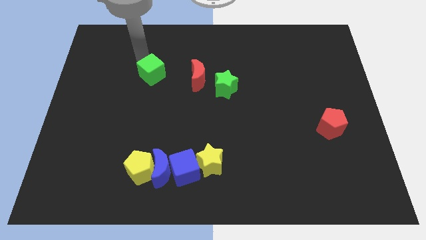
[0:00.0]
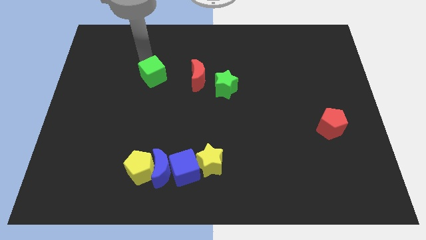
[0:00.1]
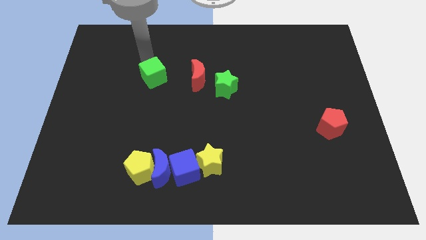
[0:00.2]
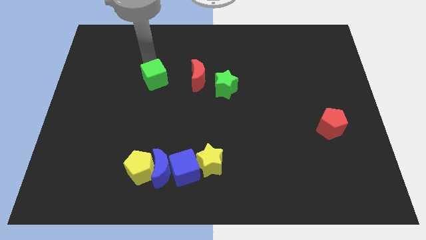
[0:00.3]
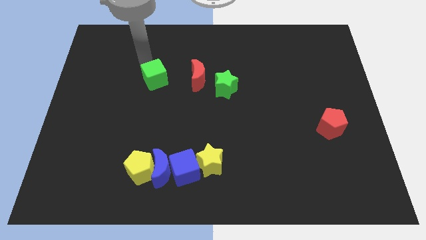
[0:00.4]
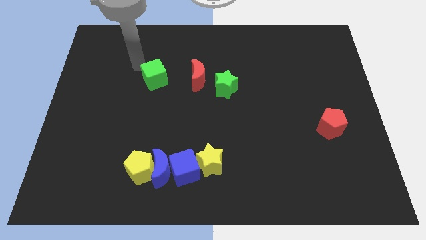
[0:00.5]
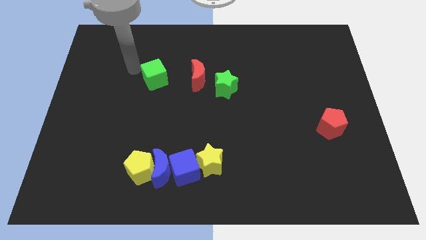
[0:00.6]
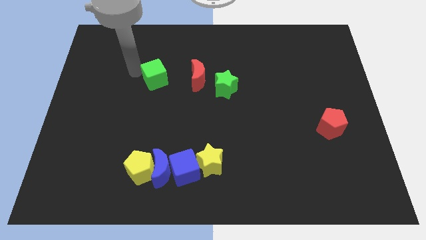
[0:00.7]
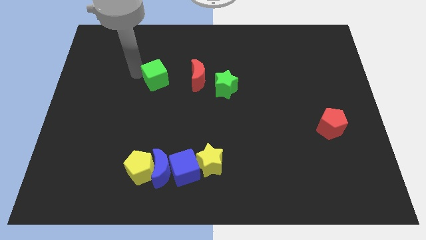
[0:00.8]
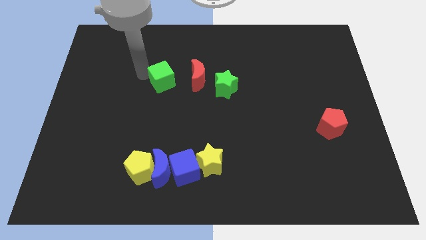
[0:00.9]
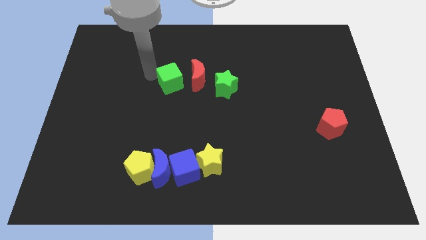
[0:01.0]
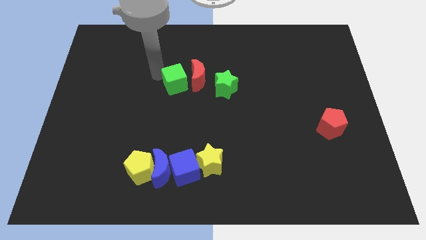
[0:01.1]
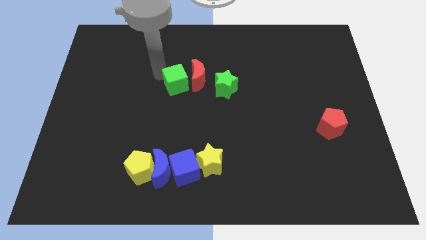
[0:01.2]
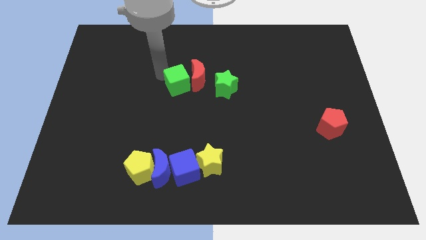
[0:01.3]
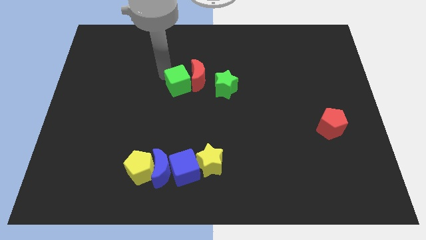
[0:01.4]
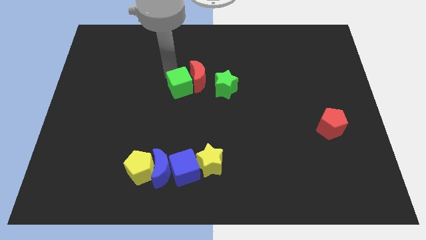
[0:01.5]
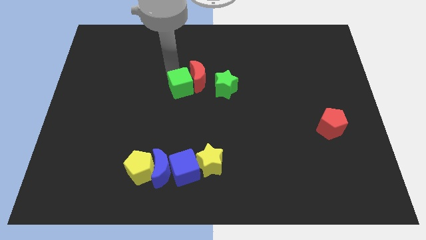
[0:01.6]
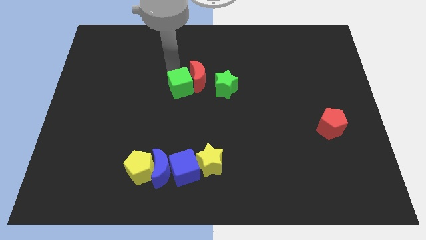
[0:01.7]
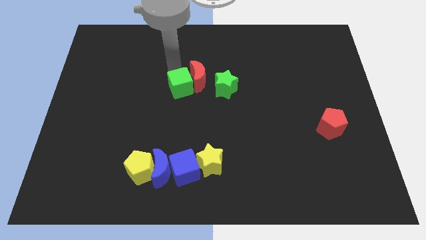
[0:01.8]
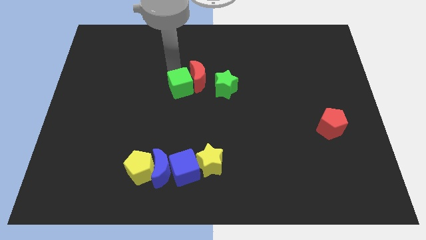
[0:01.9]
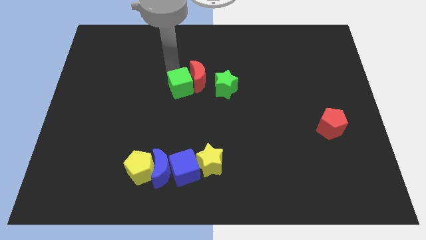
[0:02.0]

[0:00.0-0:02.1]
push the green cube into the red moon

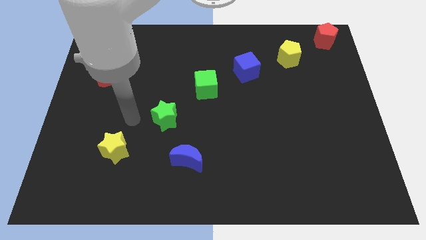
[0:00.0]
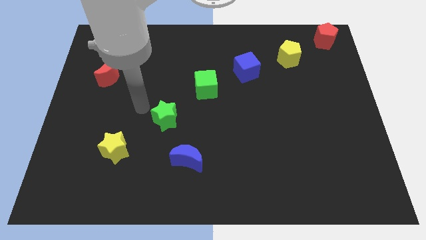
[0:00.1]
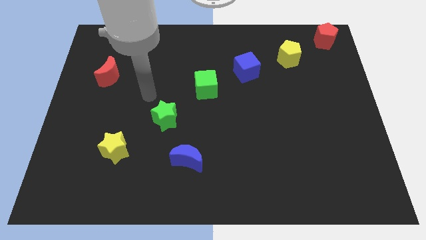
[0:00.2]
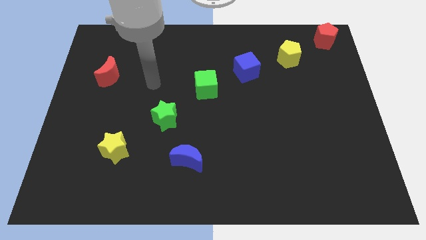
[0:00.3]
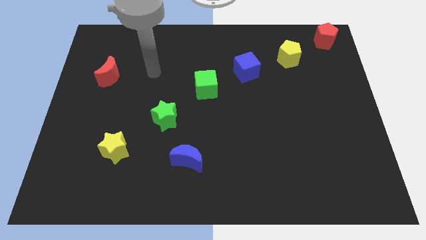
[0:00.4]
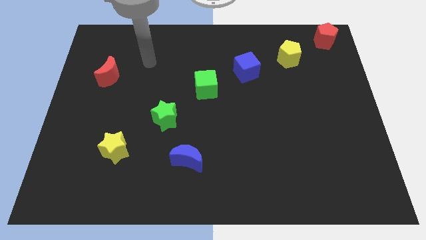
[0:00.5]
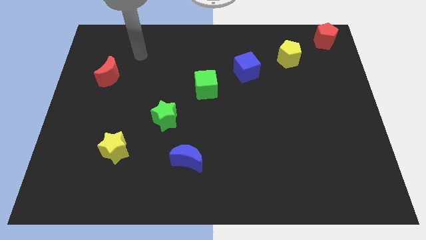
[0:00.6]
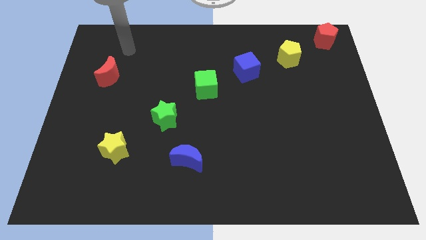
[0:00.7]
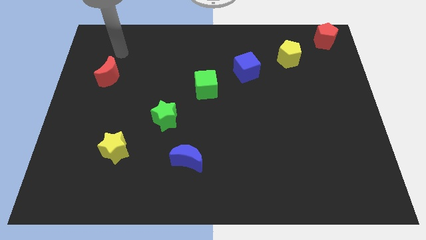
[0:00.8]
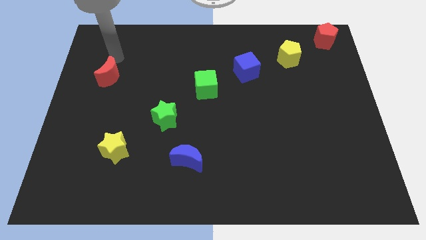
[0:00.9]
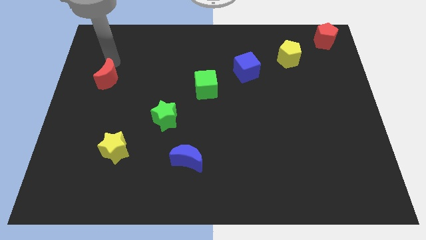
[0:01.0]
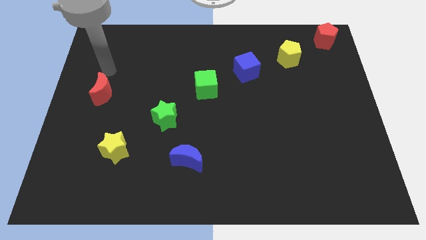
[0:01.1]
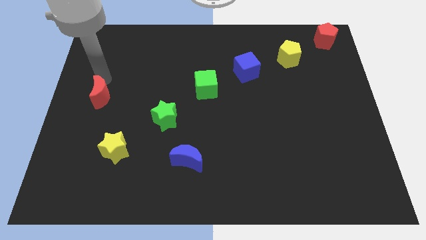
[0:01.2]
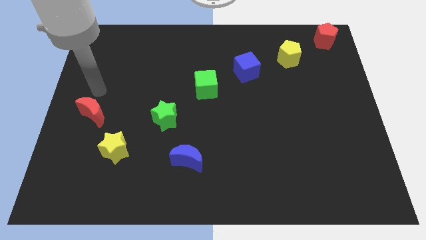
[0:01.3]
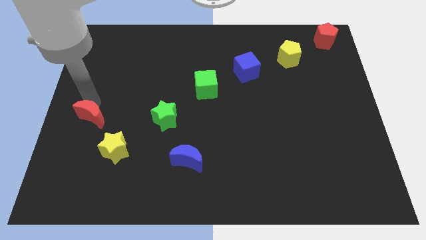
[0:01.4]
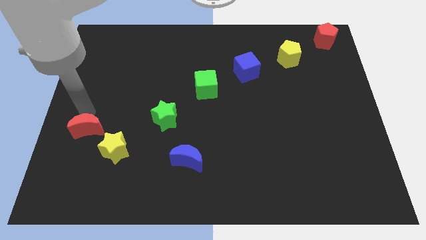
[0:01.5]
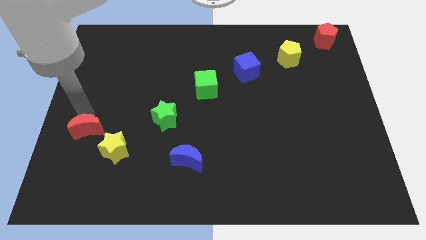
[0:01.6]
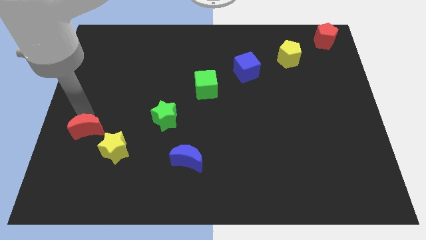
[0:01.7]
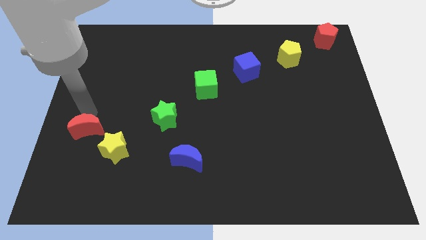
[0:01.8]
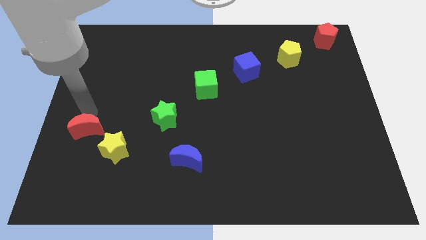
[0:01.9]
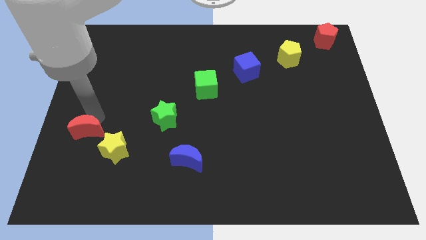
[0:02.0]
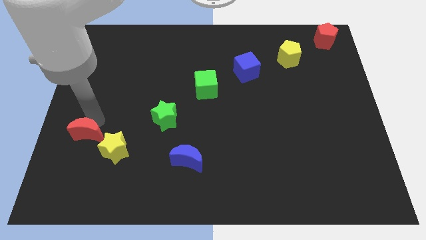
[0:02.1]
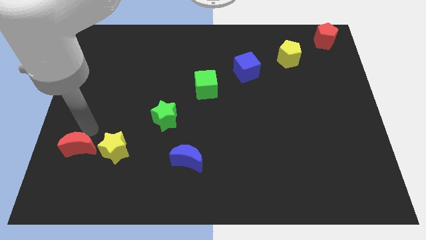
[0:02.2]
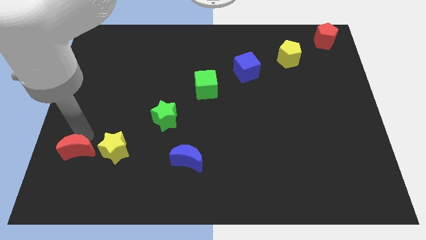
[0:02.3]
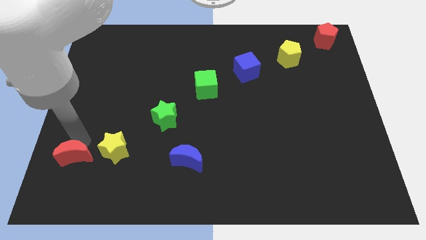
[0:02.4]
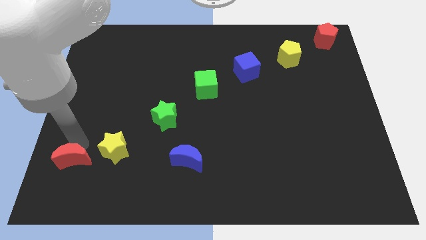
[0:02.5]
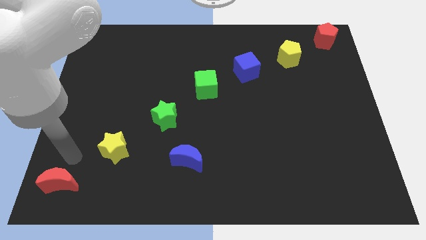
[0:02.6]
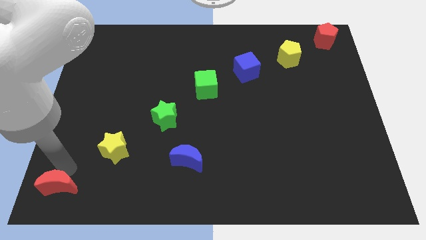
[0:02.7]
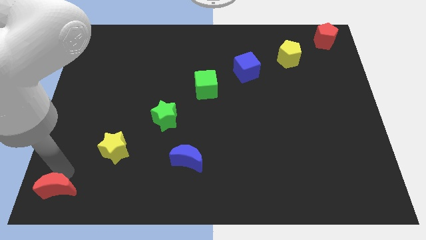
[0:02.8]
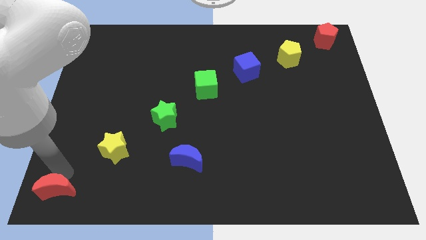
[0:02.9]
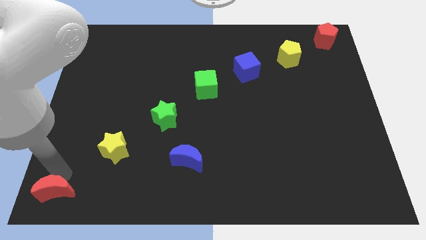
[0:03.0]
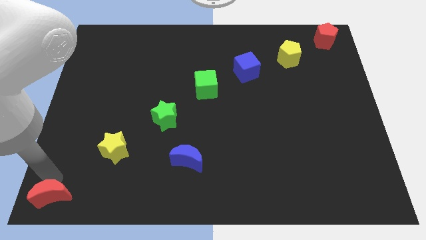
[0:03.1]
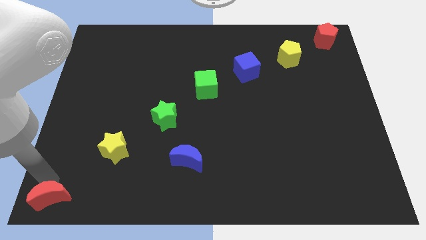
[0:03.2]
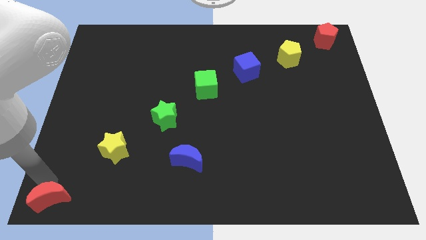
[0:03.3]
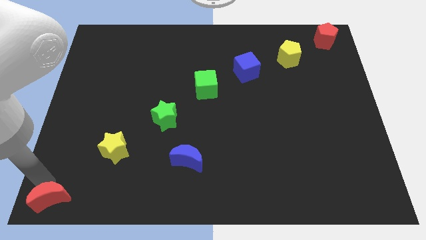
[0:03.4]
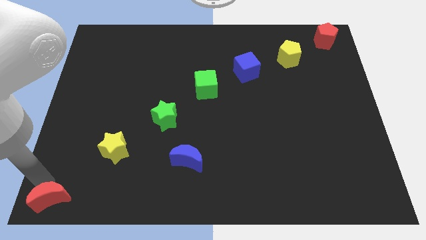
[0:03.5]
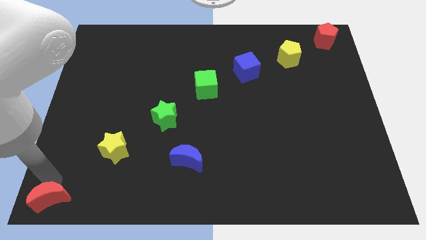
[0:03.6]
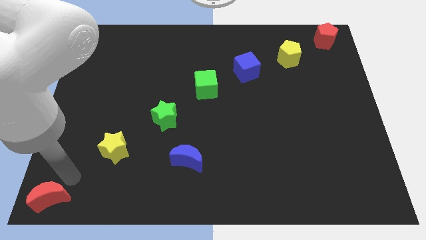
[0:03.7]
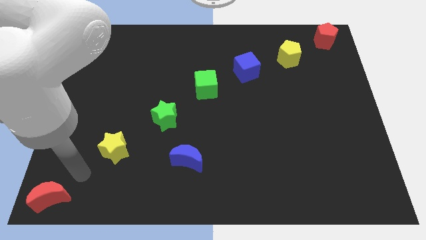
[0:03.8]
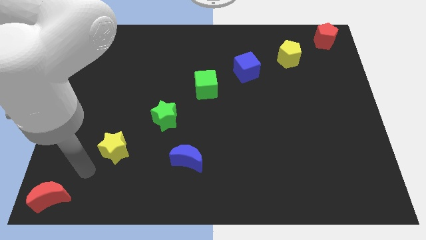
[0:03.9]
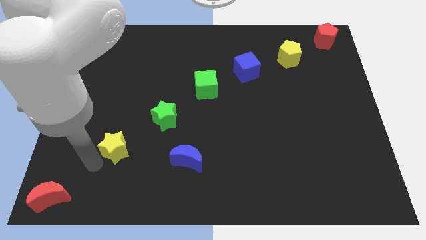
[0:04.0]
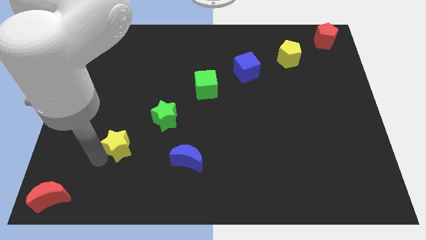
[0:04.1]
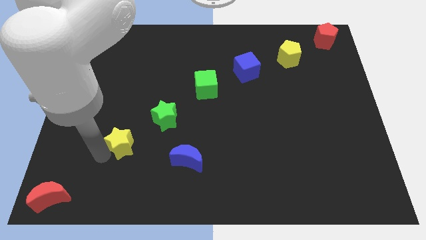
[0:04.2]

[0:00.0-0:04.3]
move the red crescent into the bottom left corner of the board

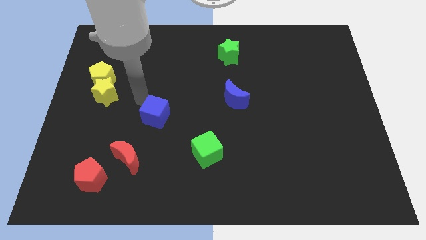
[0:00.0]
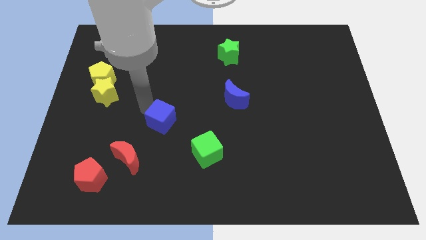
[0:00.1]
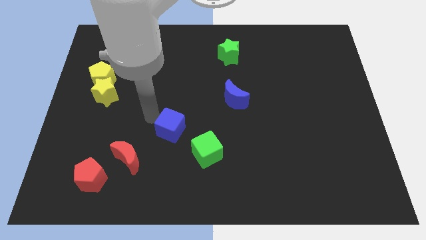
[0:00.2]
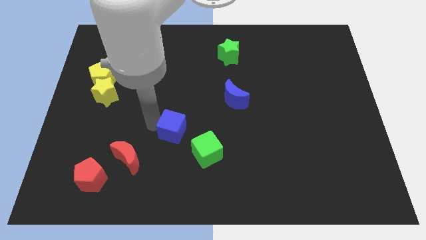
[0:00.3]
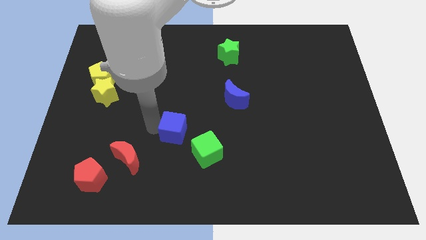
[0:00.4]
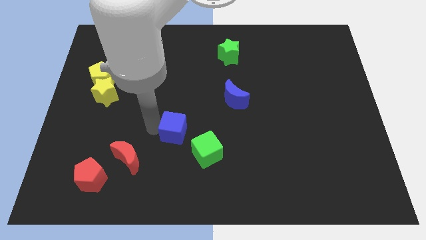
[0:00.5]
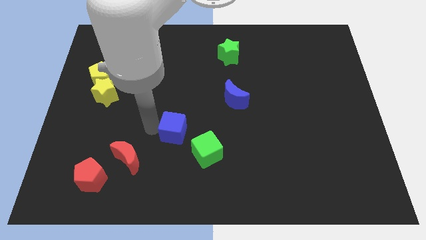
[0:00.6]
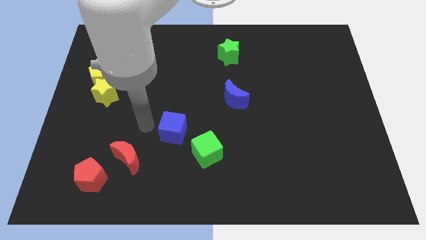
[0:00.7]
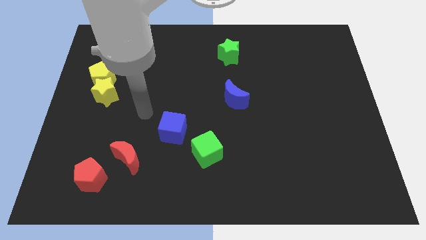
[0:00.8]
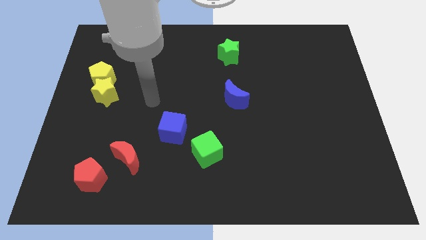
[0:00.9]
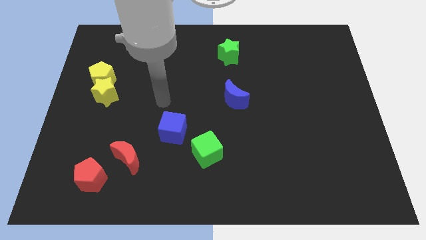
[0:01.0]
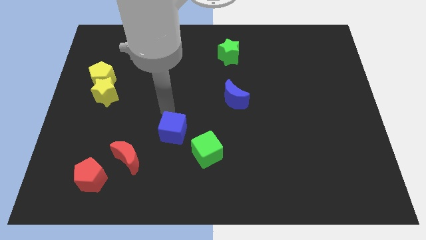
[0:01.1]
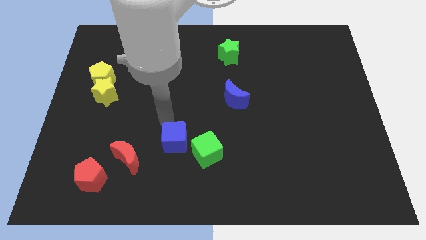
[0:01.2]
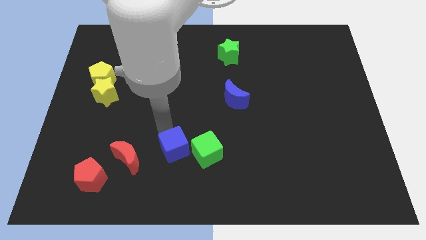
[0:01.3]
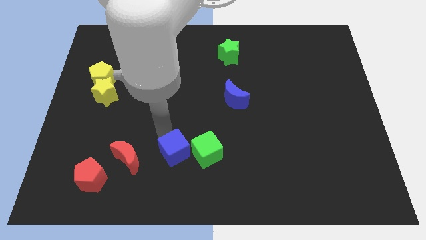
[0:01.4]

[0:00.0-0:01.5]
drag the blue cube towards the left of the green cube

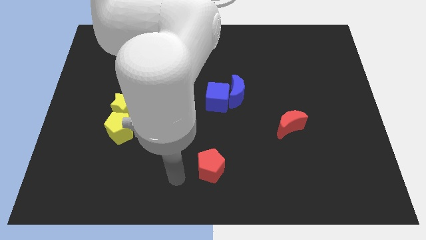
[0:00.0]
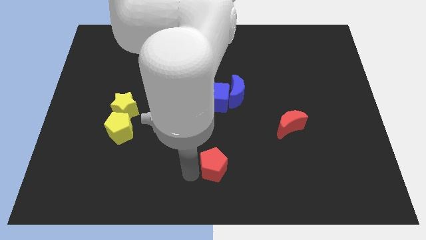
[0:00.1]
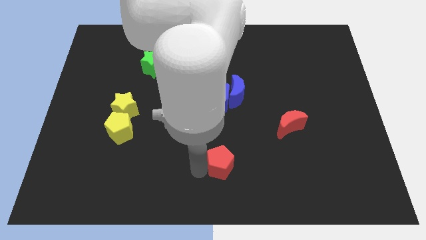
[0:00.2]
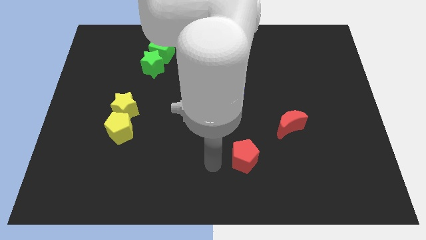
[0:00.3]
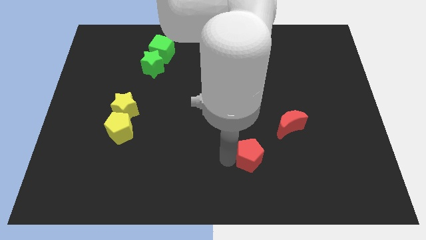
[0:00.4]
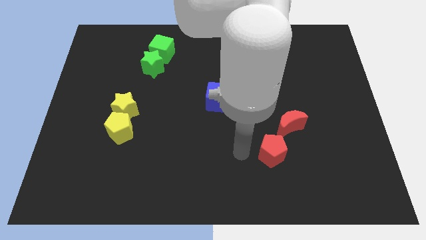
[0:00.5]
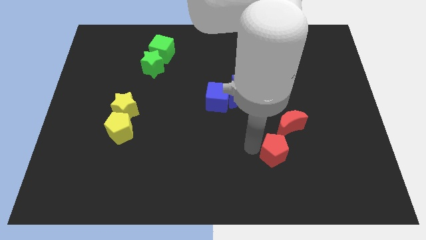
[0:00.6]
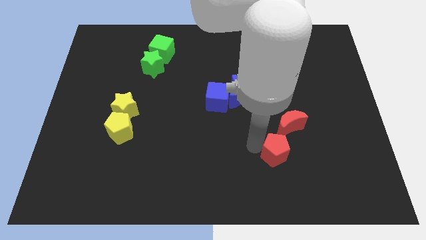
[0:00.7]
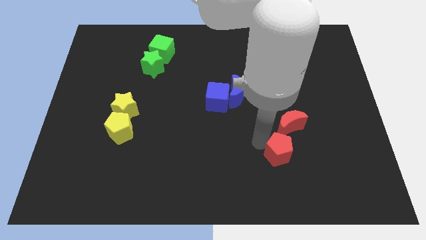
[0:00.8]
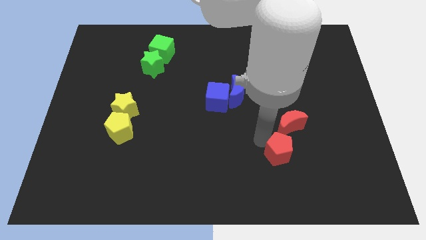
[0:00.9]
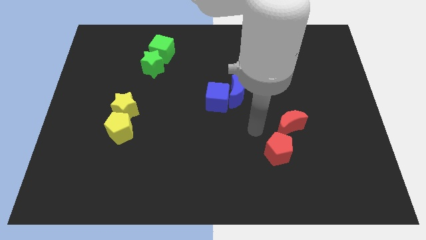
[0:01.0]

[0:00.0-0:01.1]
place the red pentagon to the left of the red crescent
